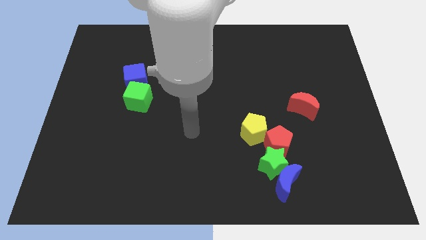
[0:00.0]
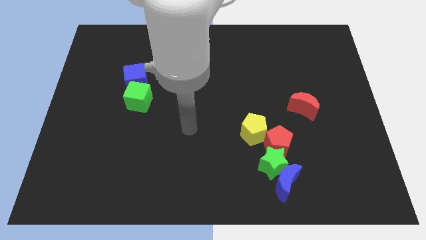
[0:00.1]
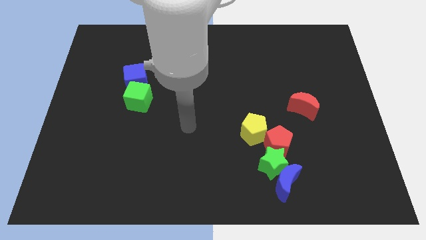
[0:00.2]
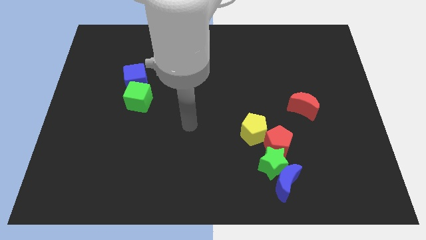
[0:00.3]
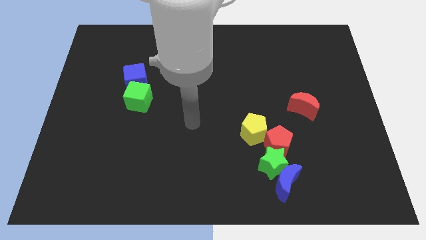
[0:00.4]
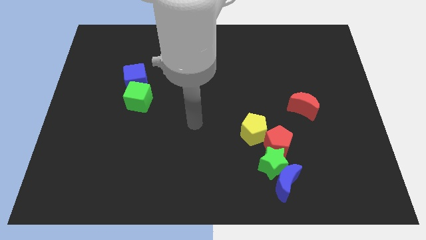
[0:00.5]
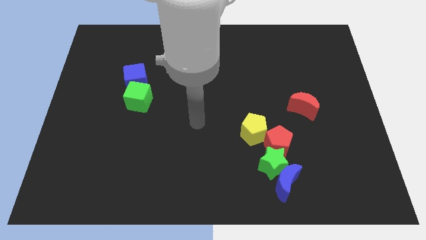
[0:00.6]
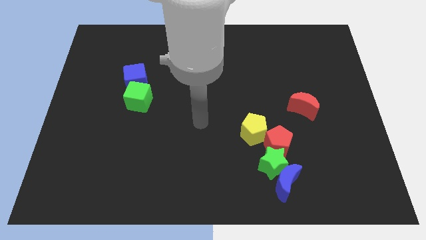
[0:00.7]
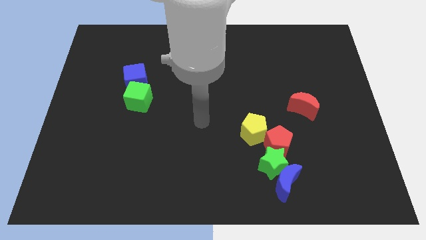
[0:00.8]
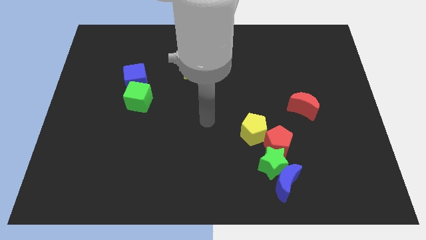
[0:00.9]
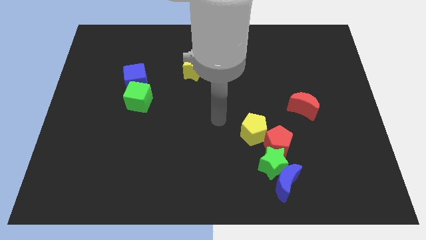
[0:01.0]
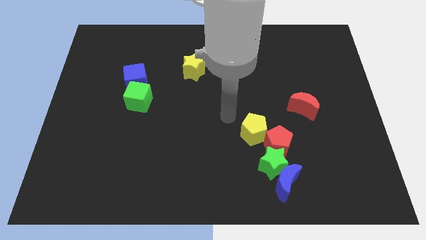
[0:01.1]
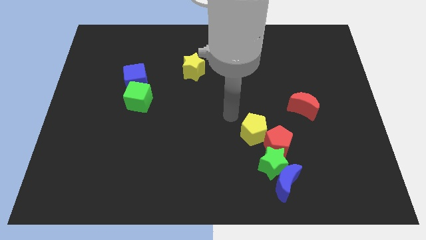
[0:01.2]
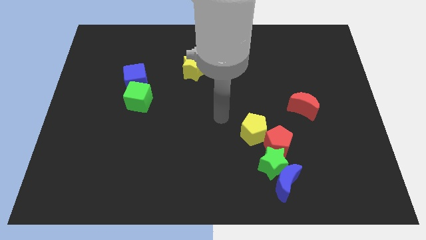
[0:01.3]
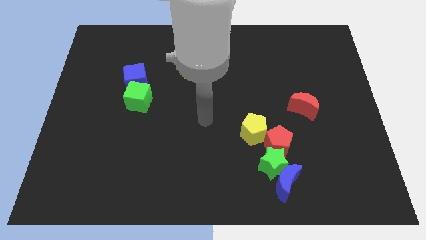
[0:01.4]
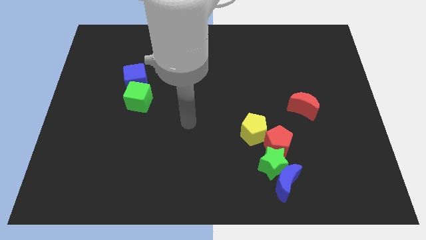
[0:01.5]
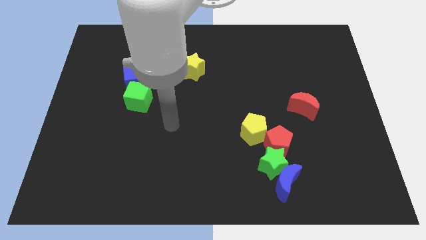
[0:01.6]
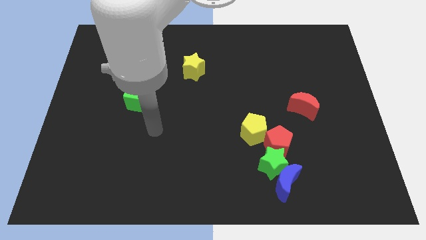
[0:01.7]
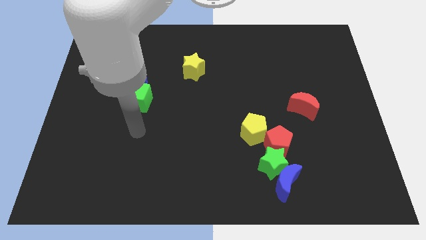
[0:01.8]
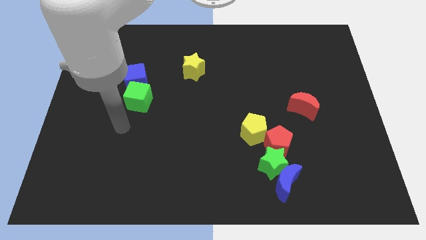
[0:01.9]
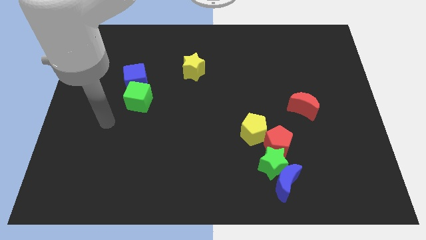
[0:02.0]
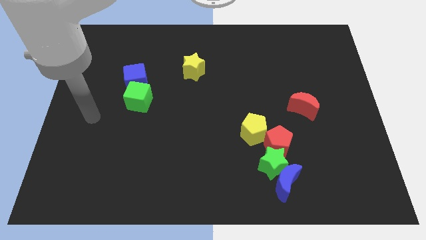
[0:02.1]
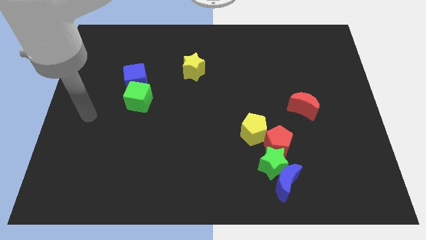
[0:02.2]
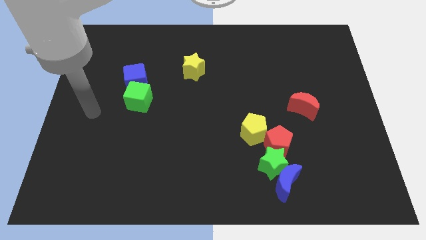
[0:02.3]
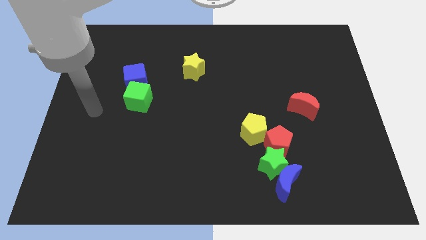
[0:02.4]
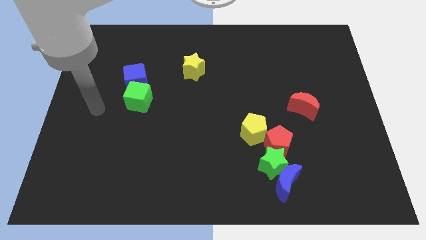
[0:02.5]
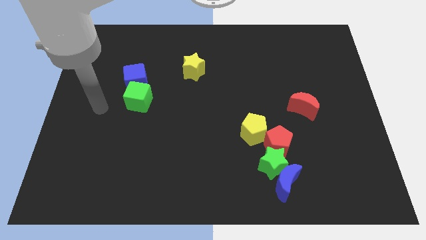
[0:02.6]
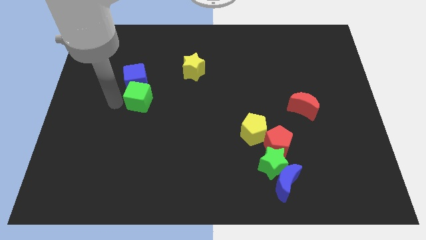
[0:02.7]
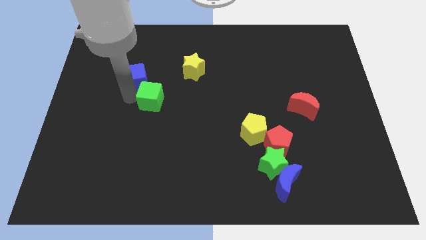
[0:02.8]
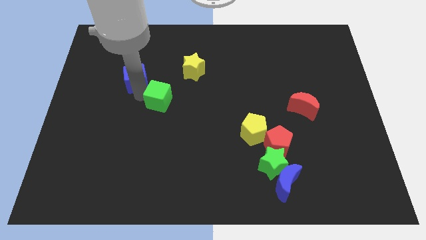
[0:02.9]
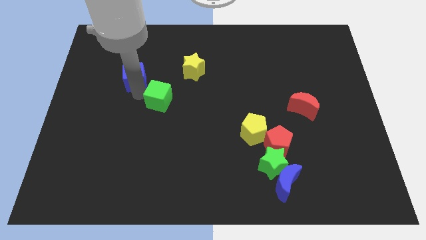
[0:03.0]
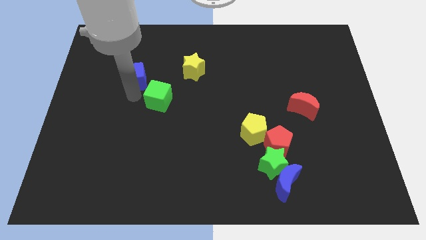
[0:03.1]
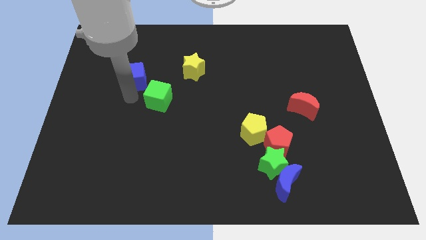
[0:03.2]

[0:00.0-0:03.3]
push the green cube slightly to the right

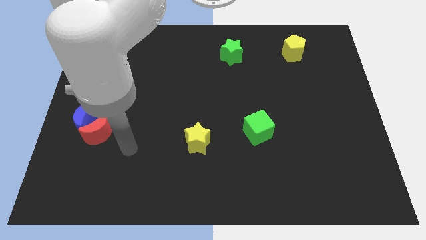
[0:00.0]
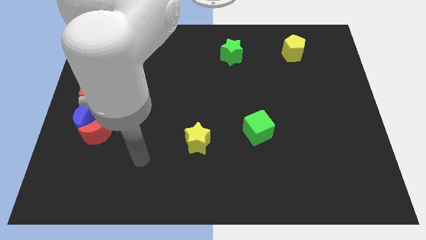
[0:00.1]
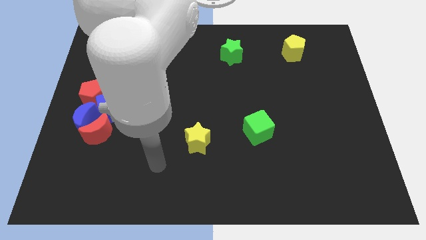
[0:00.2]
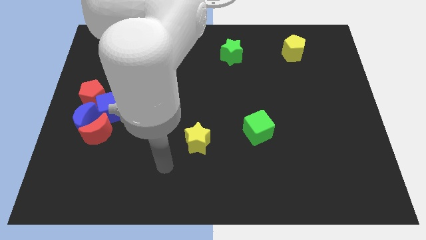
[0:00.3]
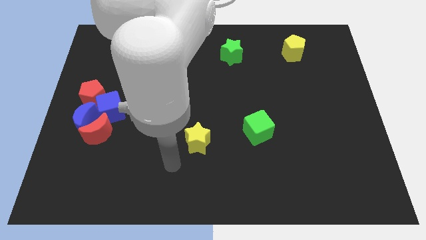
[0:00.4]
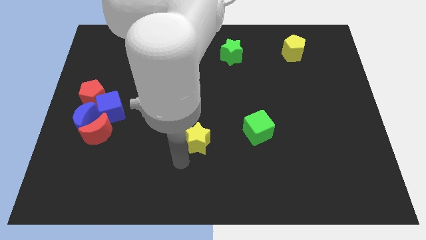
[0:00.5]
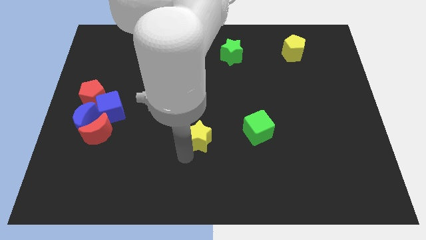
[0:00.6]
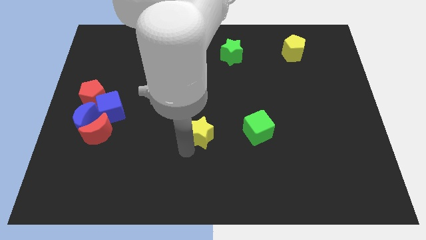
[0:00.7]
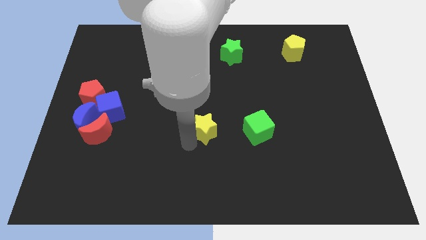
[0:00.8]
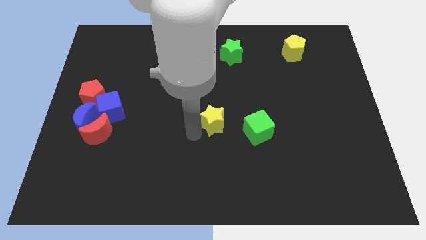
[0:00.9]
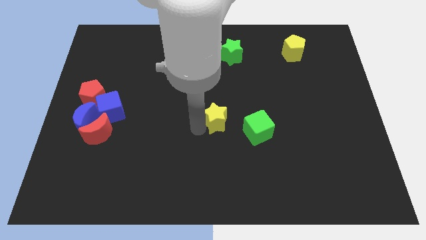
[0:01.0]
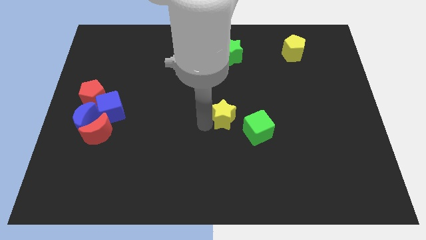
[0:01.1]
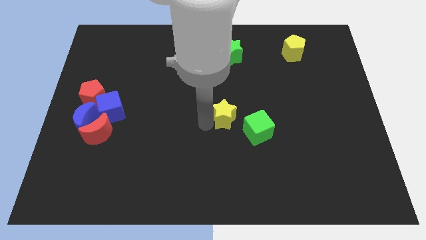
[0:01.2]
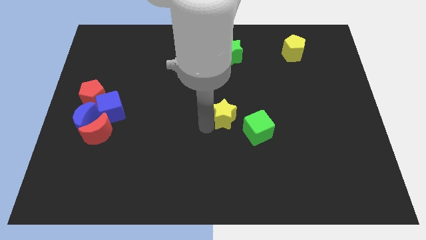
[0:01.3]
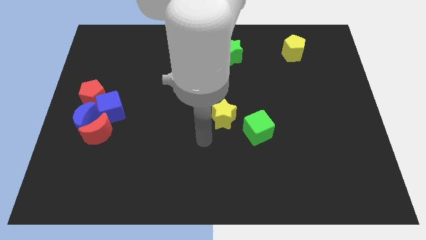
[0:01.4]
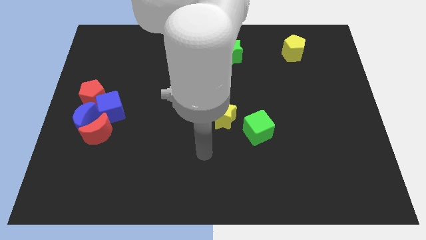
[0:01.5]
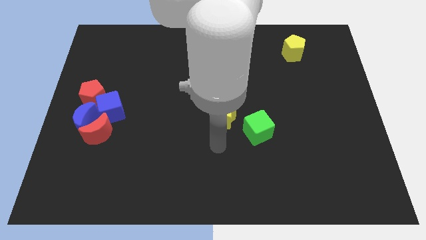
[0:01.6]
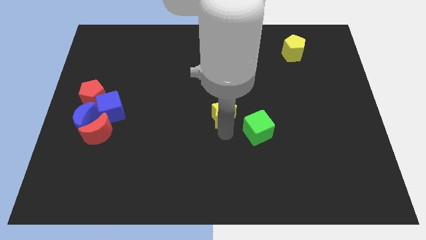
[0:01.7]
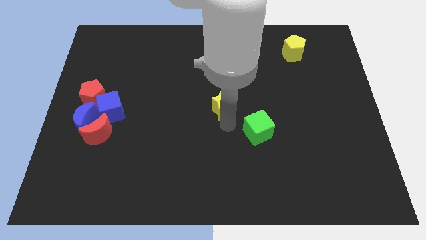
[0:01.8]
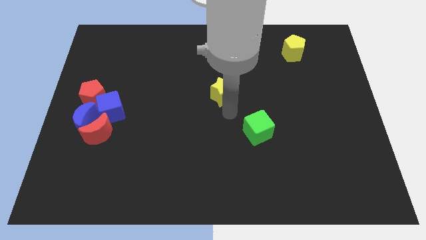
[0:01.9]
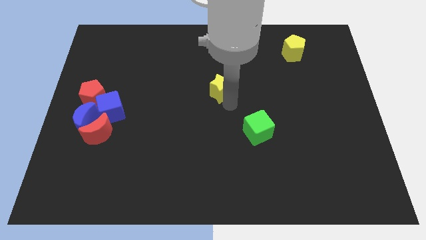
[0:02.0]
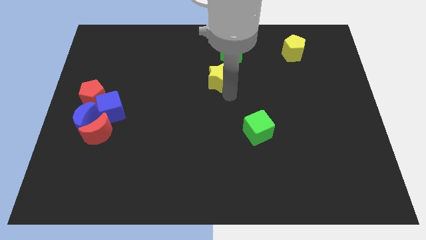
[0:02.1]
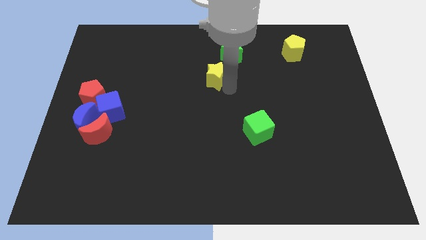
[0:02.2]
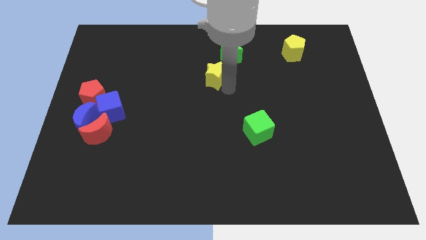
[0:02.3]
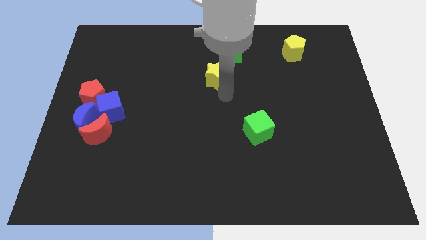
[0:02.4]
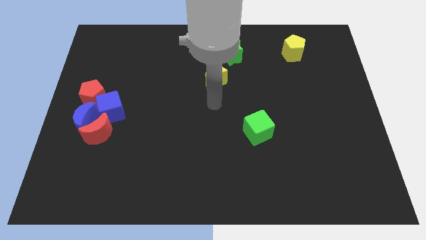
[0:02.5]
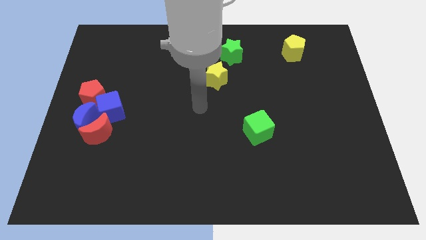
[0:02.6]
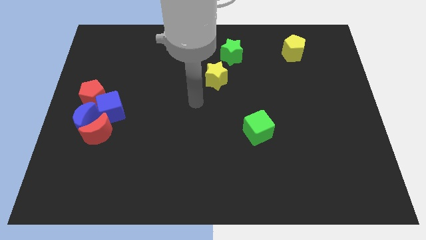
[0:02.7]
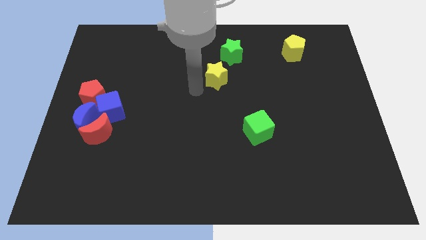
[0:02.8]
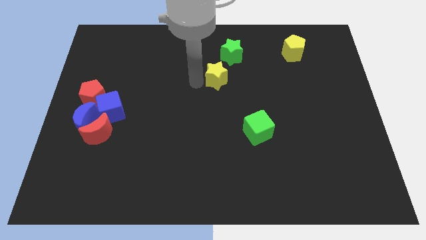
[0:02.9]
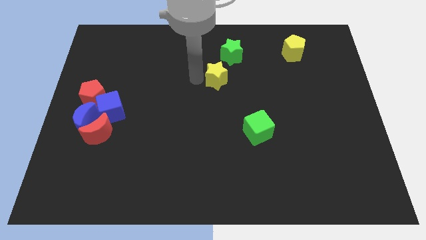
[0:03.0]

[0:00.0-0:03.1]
push the yellow star slightly towards the green star

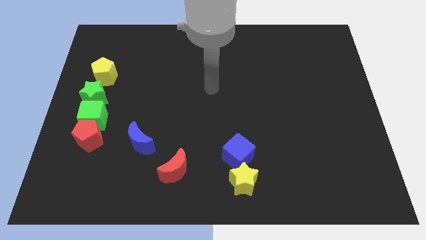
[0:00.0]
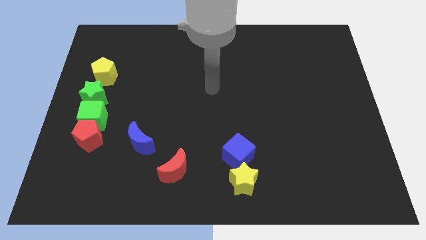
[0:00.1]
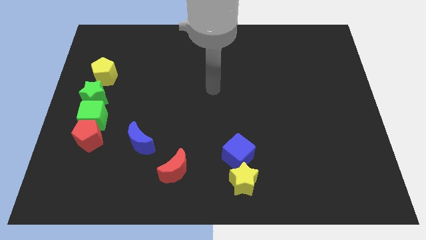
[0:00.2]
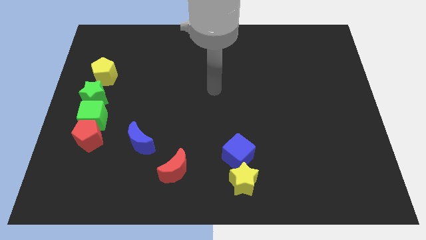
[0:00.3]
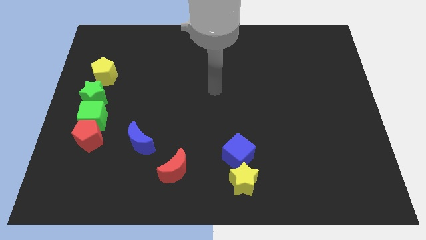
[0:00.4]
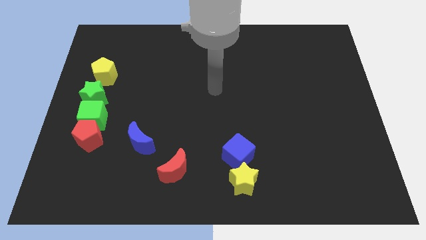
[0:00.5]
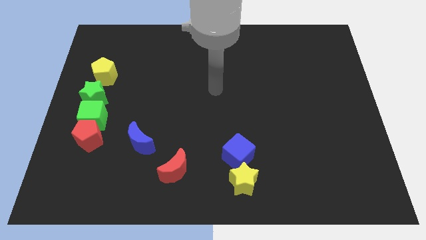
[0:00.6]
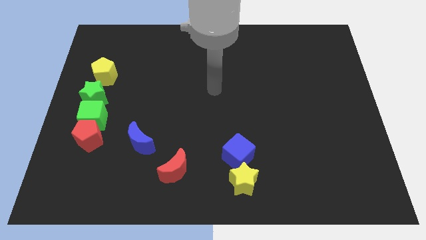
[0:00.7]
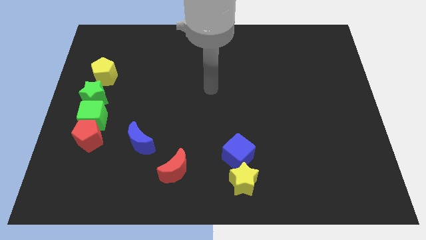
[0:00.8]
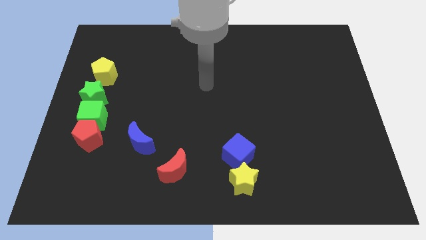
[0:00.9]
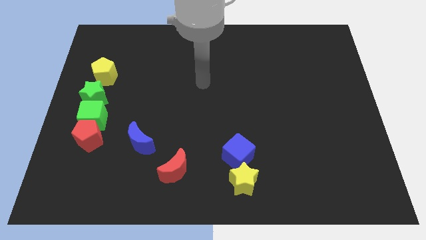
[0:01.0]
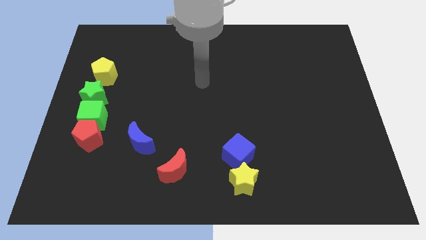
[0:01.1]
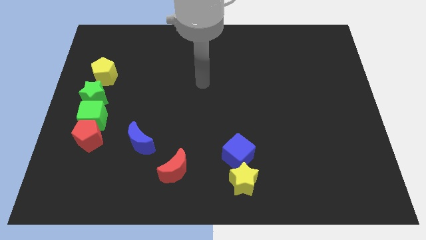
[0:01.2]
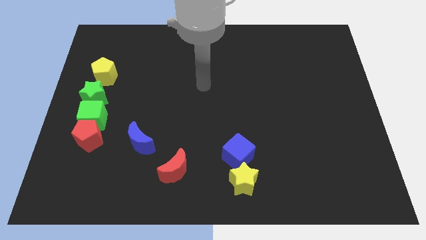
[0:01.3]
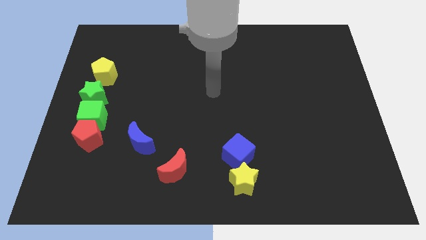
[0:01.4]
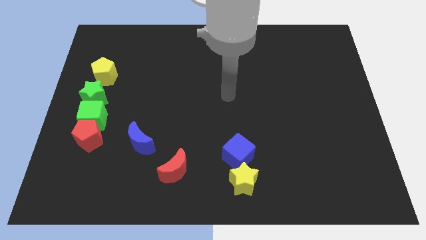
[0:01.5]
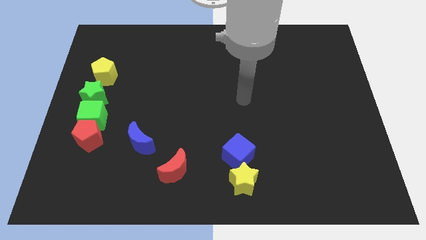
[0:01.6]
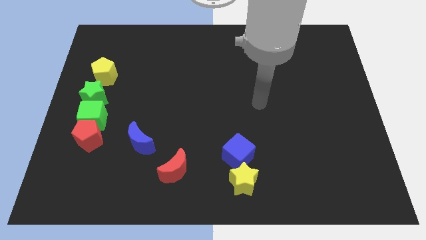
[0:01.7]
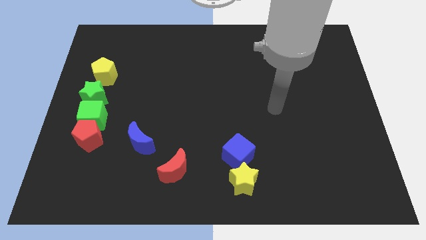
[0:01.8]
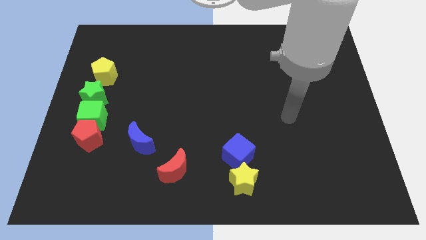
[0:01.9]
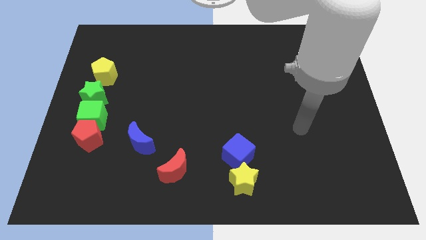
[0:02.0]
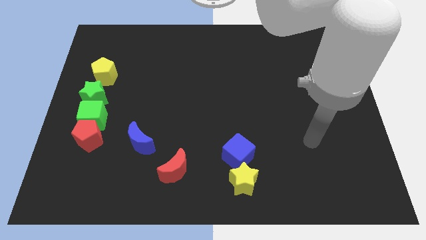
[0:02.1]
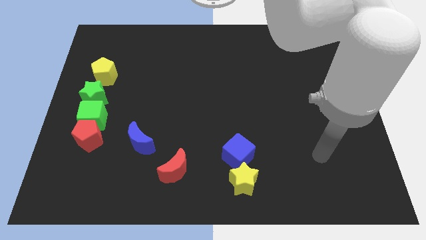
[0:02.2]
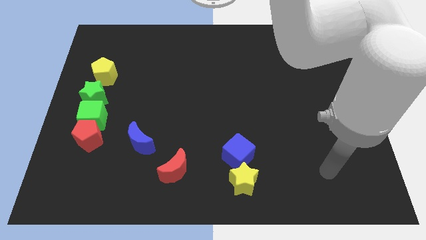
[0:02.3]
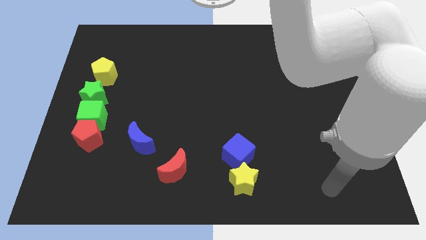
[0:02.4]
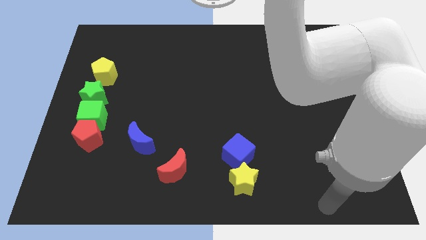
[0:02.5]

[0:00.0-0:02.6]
move your arm to the bottom of the board
